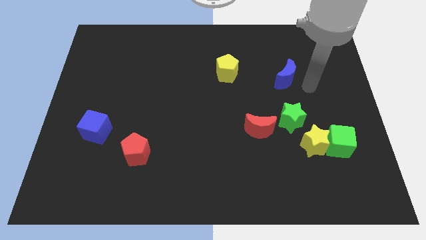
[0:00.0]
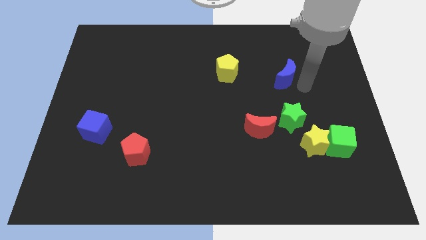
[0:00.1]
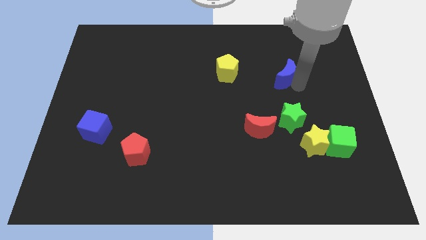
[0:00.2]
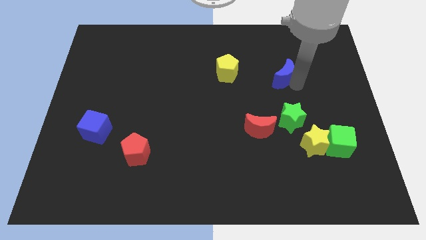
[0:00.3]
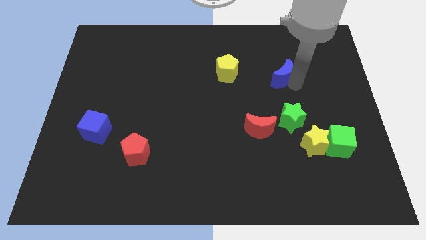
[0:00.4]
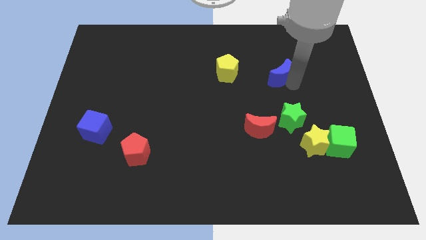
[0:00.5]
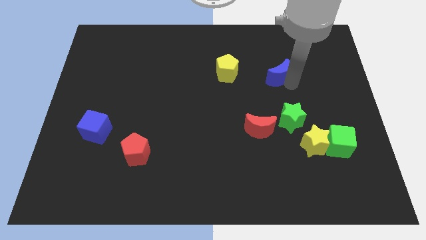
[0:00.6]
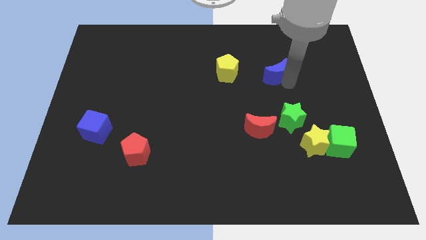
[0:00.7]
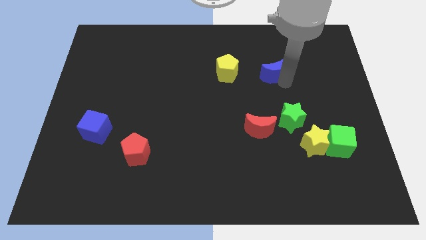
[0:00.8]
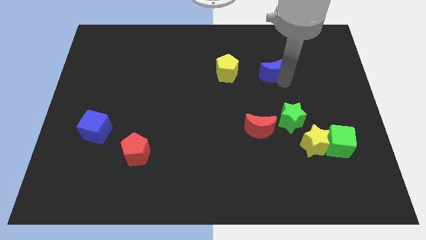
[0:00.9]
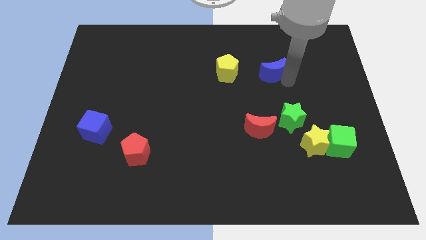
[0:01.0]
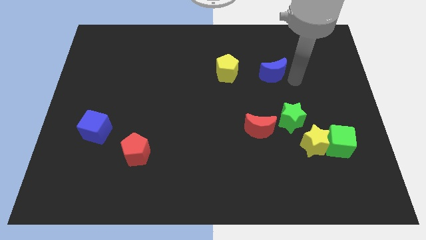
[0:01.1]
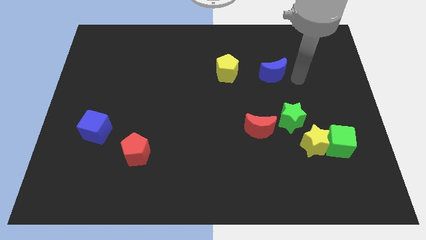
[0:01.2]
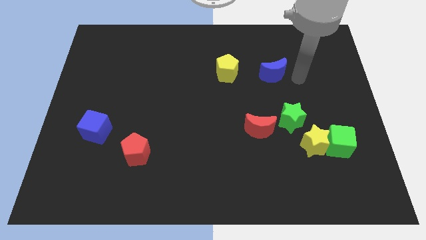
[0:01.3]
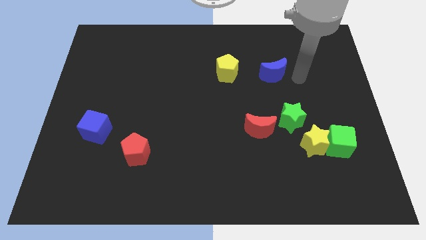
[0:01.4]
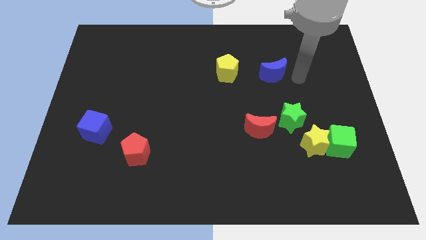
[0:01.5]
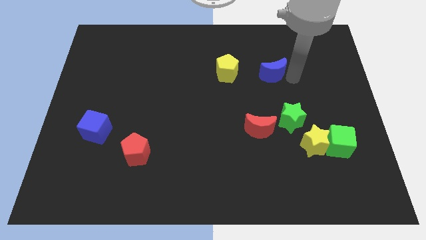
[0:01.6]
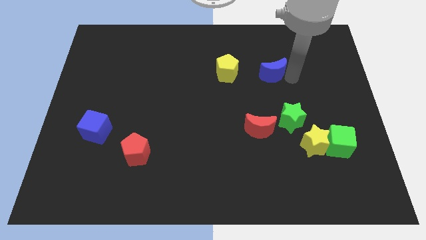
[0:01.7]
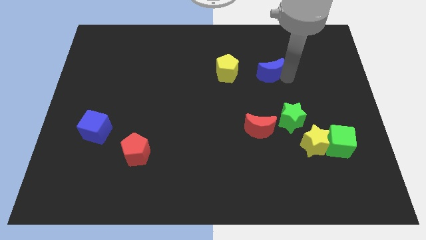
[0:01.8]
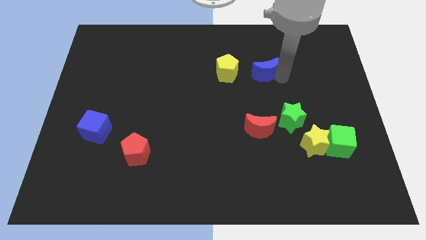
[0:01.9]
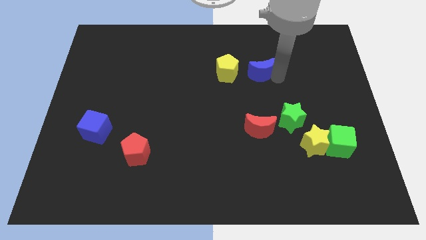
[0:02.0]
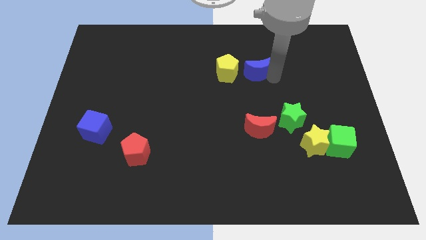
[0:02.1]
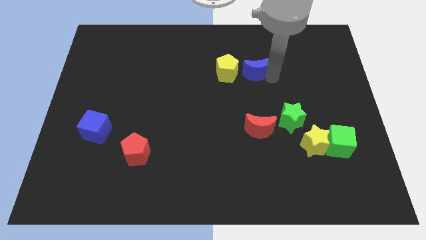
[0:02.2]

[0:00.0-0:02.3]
move the blue moon to the right of the yellow pentagon

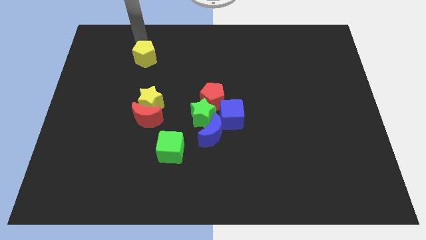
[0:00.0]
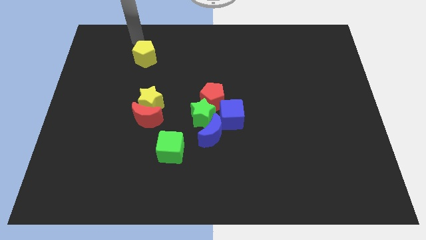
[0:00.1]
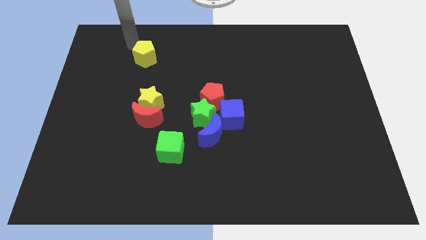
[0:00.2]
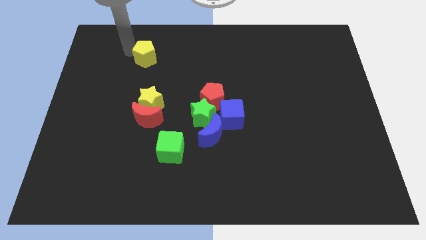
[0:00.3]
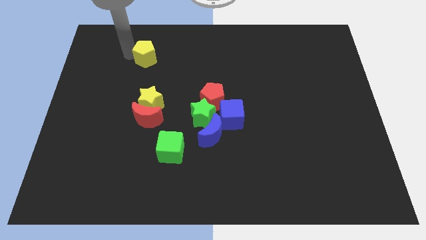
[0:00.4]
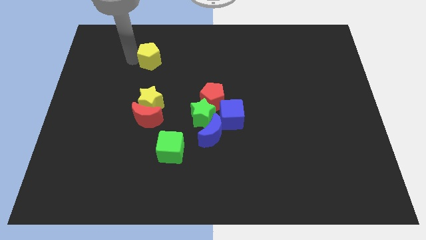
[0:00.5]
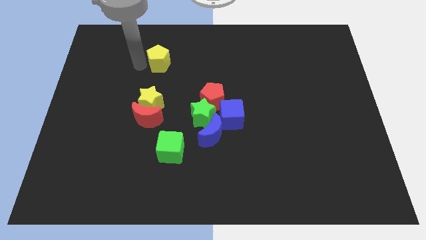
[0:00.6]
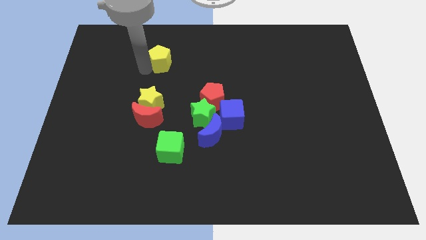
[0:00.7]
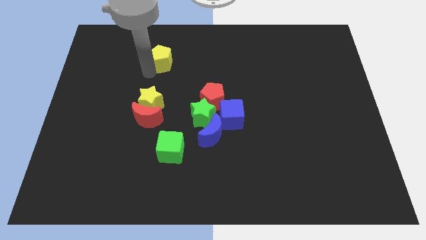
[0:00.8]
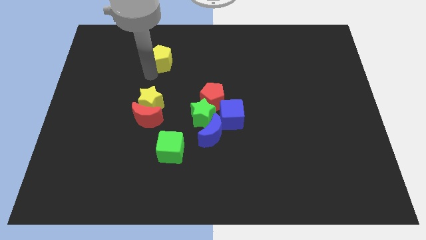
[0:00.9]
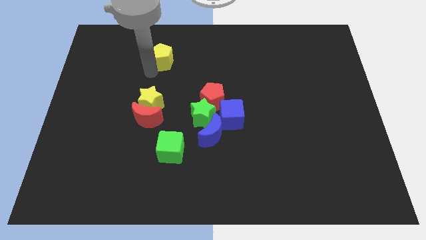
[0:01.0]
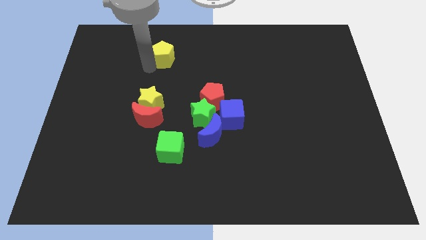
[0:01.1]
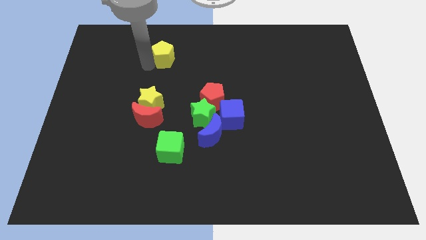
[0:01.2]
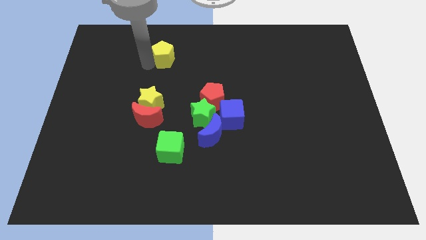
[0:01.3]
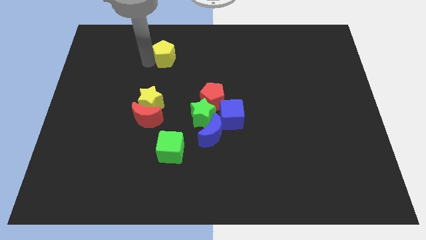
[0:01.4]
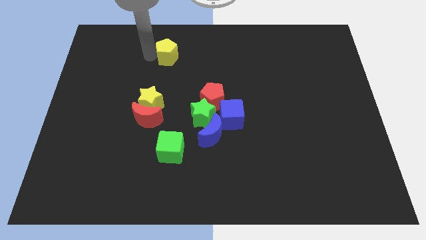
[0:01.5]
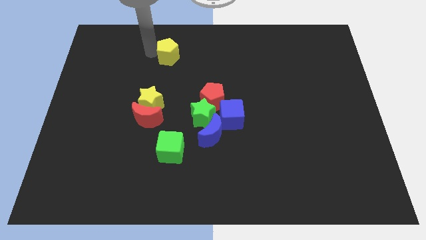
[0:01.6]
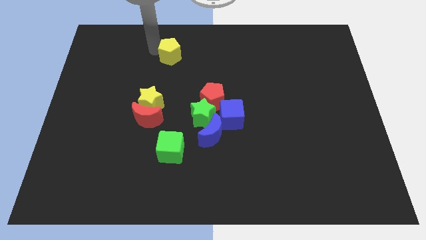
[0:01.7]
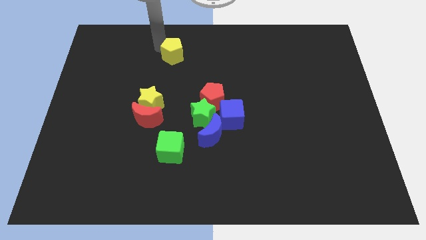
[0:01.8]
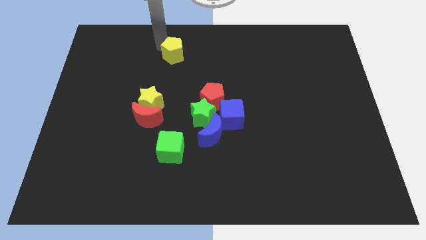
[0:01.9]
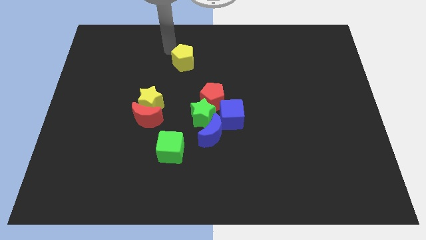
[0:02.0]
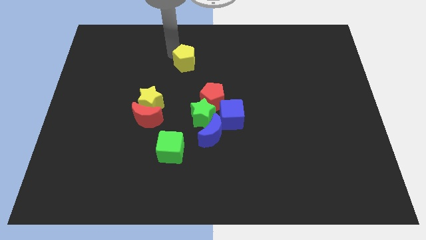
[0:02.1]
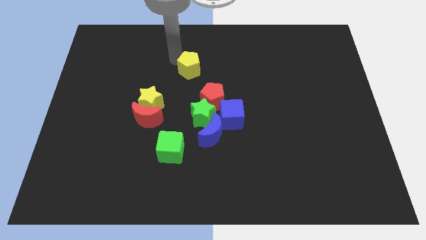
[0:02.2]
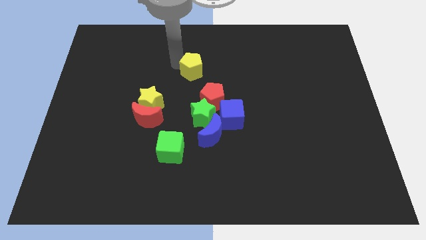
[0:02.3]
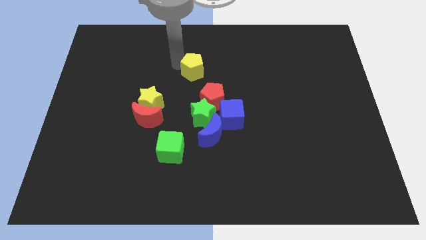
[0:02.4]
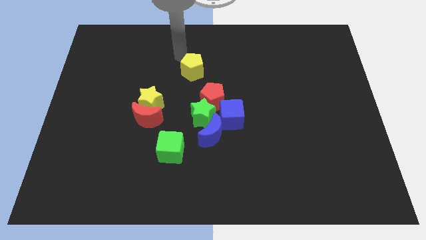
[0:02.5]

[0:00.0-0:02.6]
move the yellow pentagon above the red pentagon diagonally

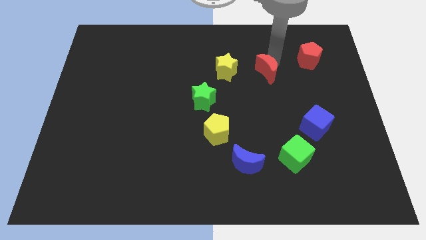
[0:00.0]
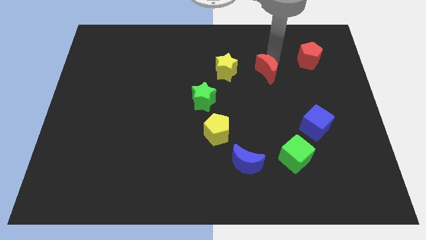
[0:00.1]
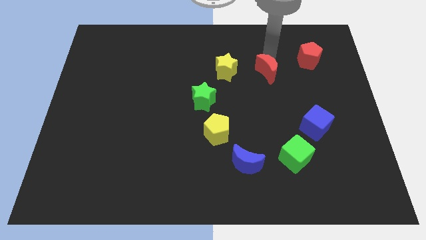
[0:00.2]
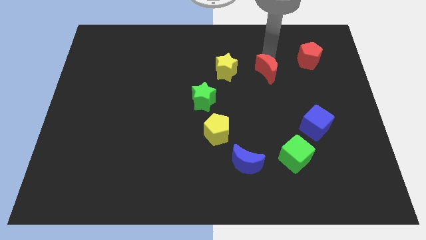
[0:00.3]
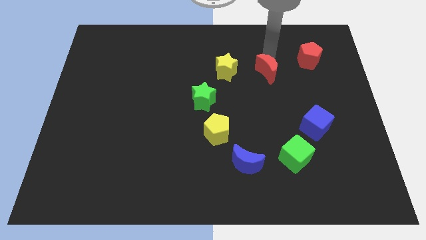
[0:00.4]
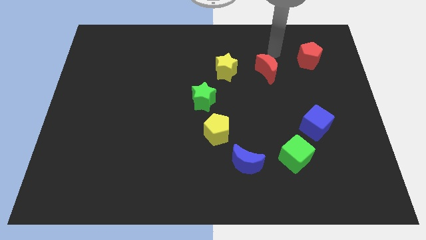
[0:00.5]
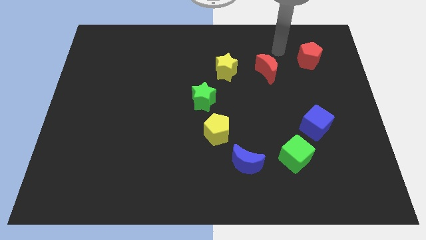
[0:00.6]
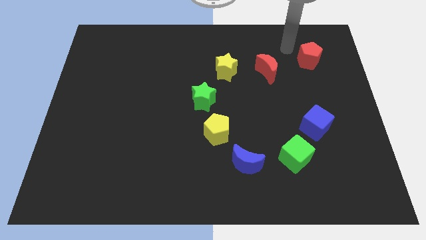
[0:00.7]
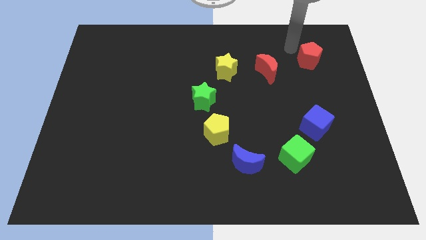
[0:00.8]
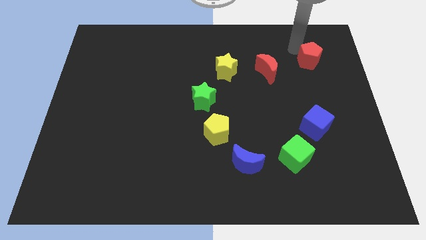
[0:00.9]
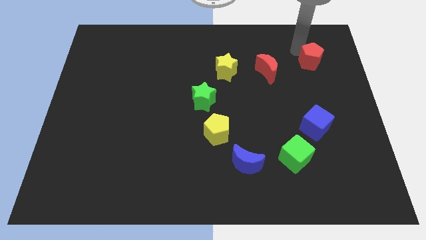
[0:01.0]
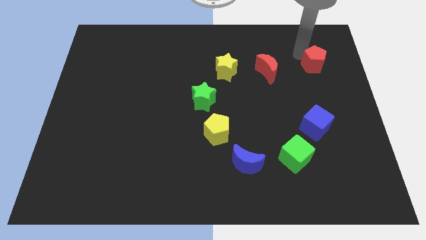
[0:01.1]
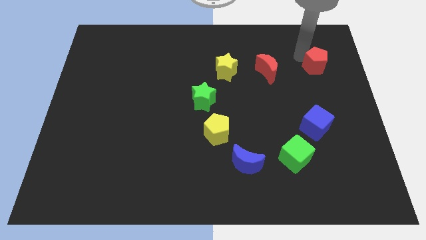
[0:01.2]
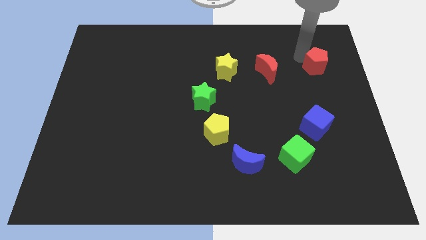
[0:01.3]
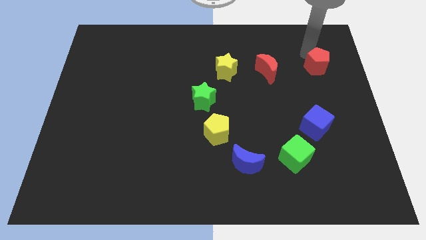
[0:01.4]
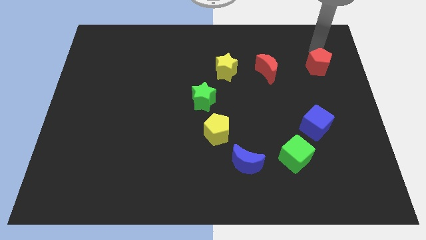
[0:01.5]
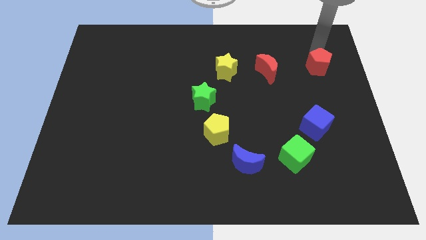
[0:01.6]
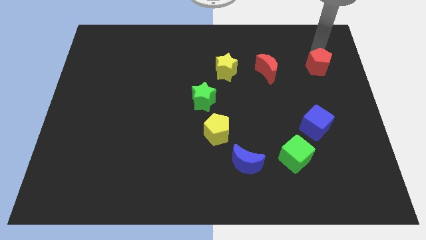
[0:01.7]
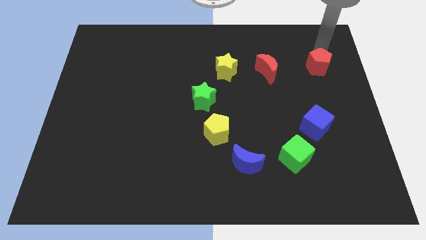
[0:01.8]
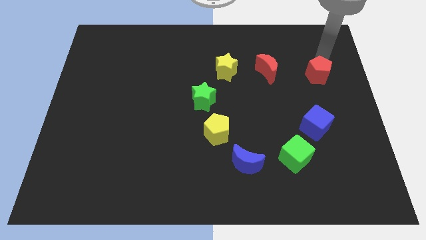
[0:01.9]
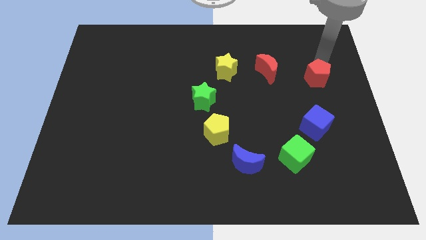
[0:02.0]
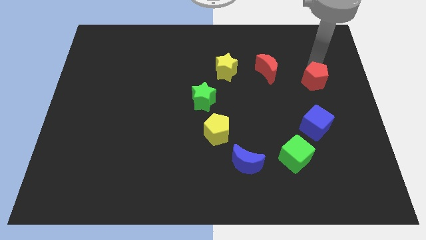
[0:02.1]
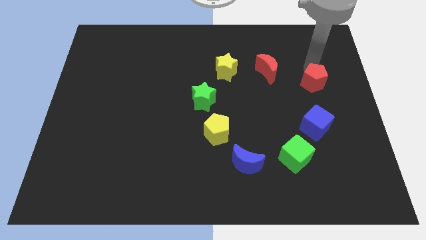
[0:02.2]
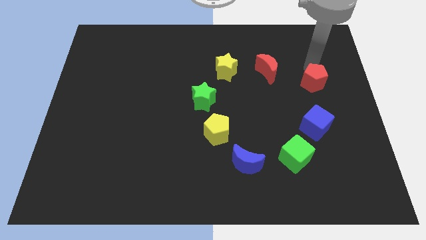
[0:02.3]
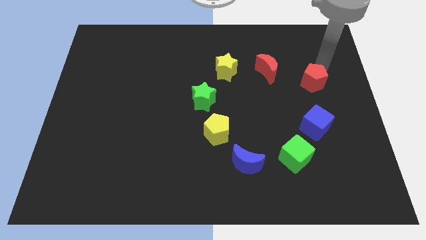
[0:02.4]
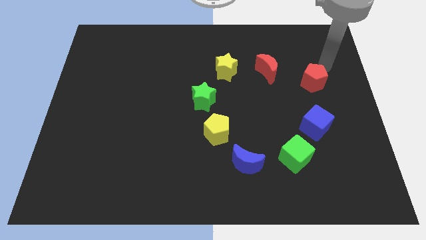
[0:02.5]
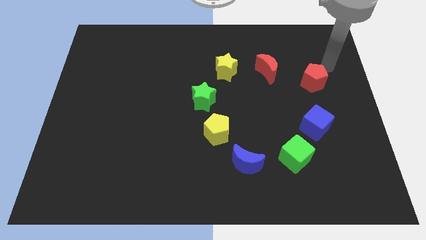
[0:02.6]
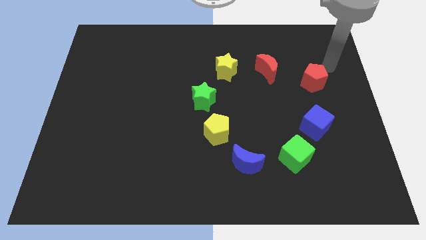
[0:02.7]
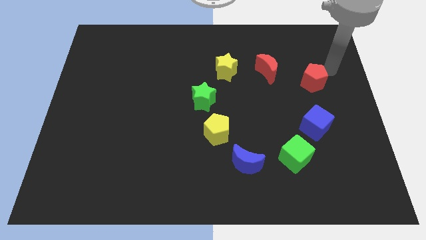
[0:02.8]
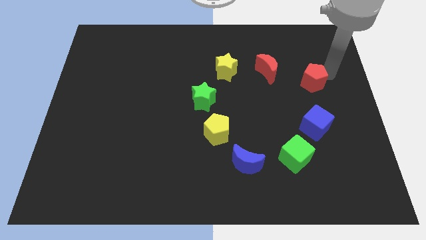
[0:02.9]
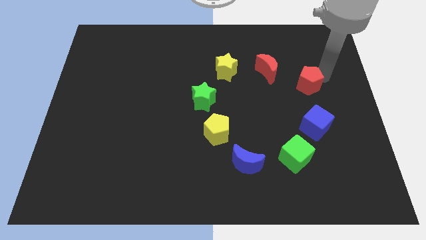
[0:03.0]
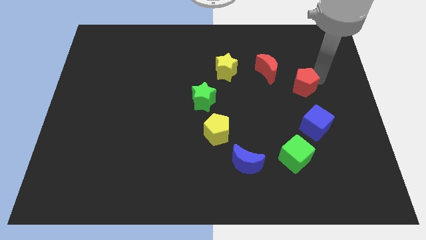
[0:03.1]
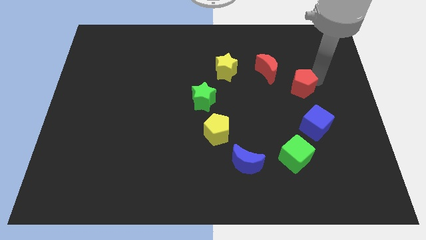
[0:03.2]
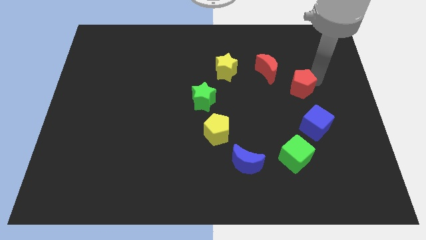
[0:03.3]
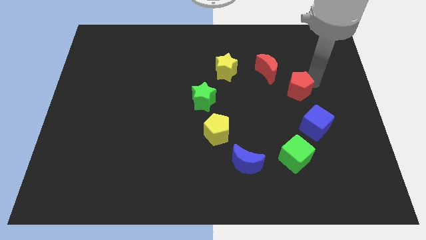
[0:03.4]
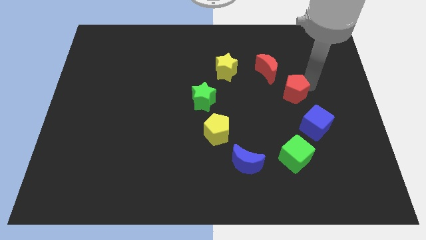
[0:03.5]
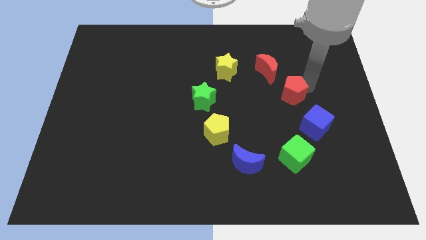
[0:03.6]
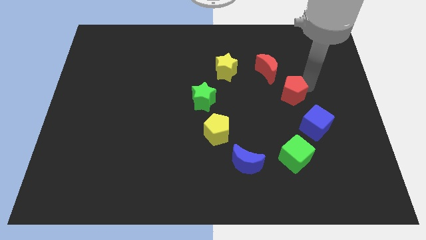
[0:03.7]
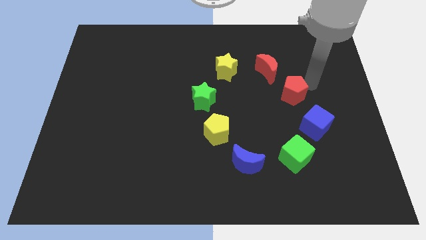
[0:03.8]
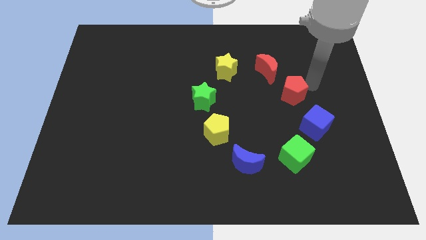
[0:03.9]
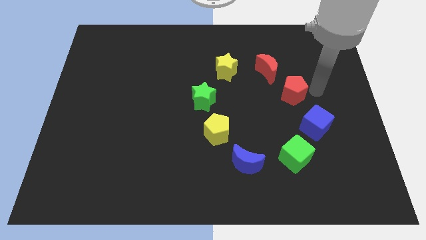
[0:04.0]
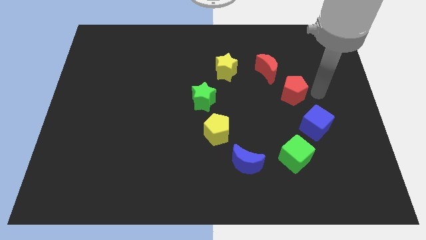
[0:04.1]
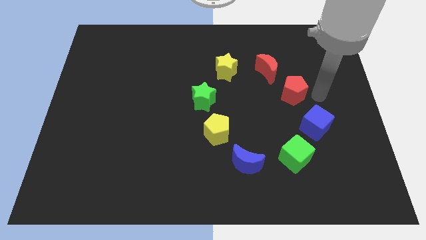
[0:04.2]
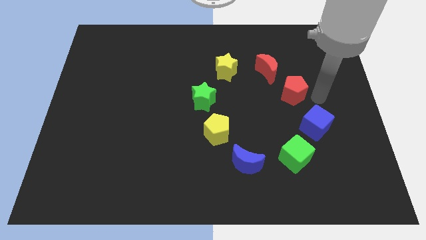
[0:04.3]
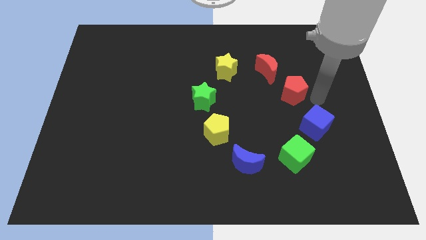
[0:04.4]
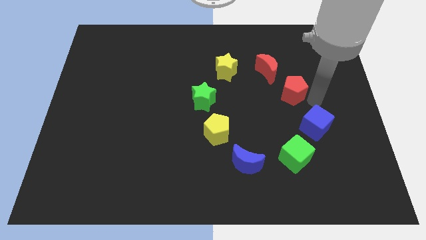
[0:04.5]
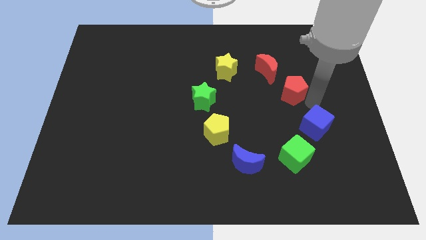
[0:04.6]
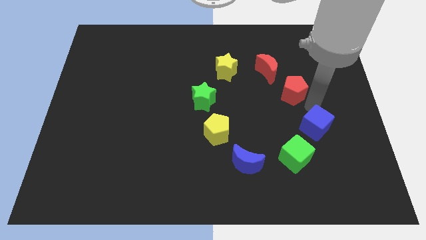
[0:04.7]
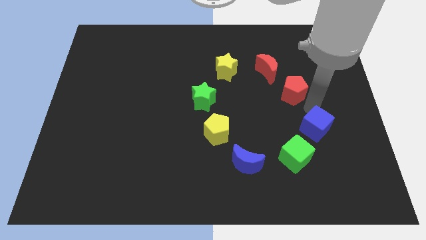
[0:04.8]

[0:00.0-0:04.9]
place the red pentagon in between the red moon and blue cube
